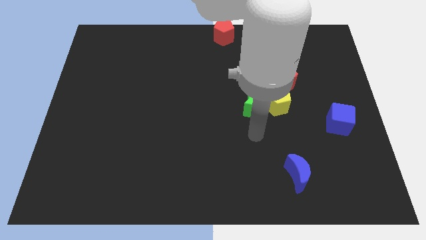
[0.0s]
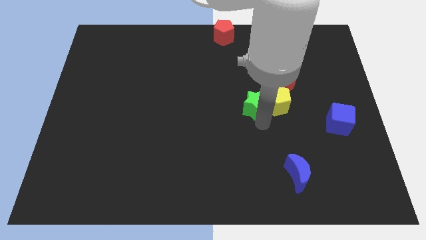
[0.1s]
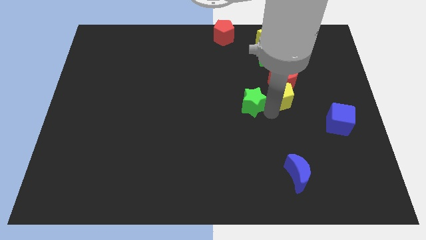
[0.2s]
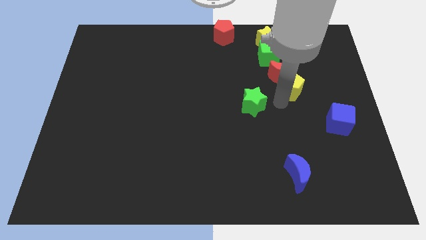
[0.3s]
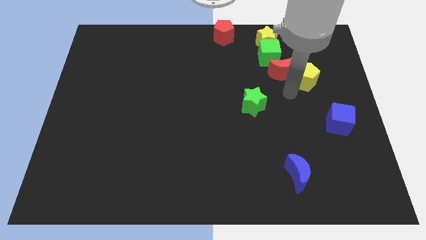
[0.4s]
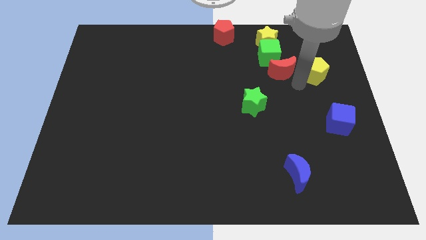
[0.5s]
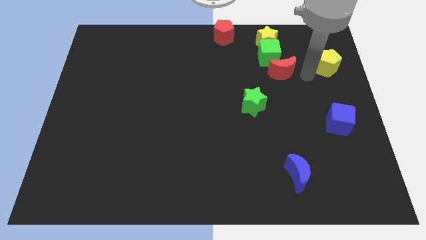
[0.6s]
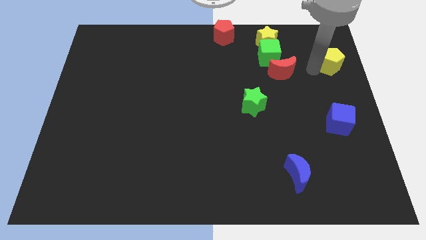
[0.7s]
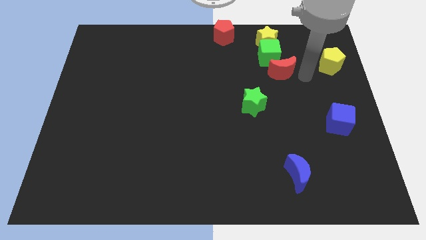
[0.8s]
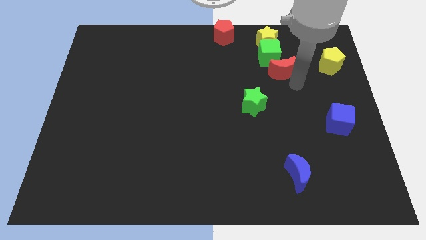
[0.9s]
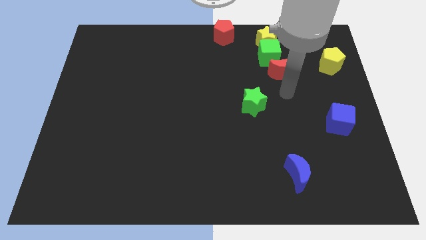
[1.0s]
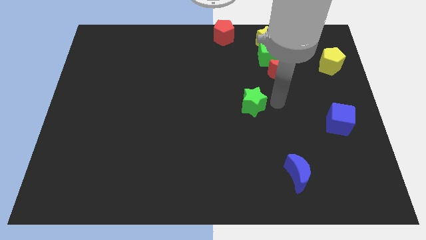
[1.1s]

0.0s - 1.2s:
push the yellow pentagon to the right of the red crescent

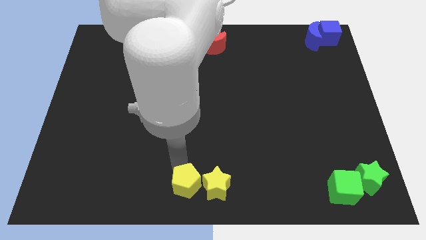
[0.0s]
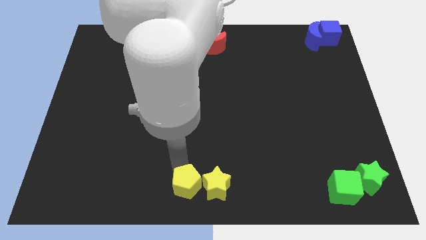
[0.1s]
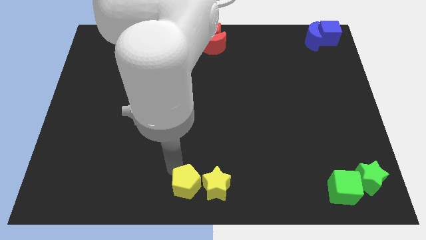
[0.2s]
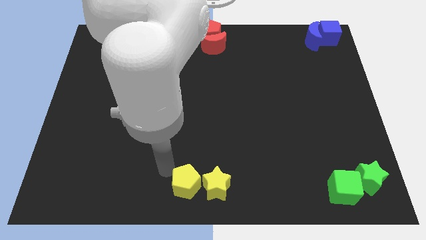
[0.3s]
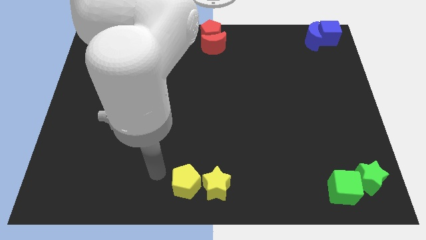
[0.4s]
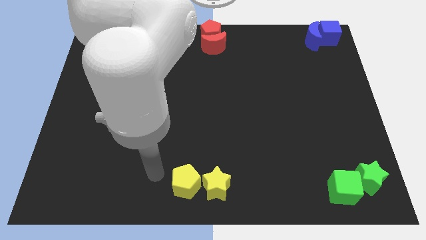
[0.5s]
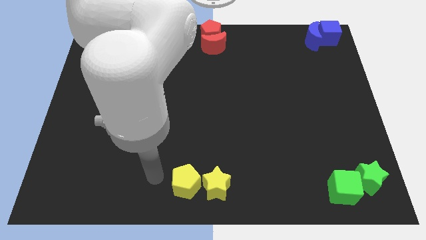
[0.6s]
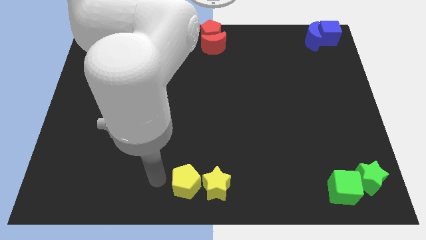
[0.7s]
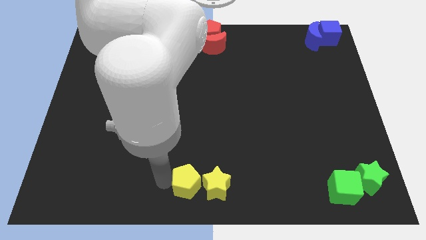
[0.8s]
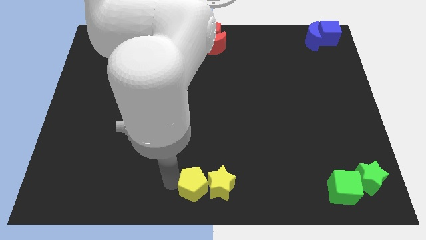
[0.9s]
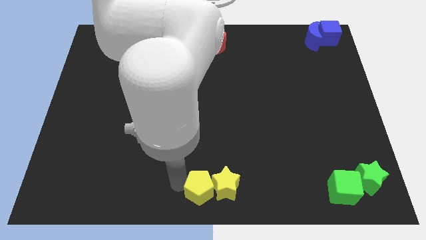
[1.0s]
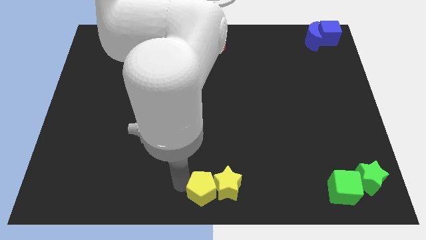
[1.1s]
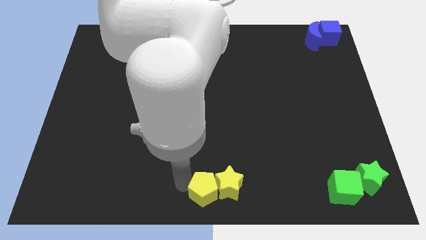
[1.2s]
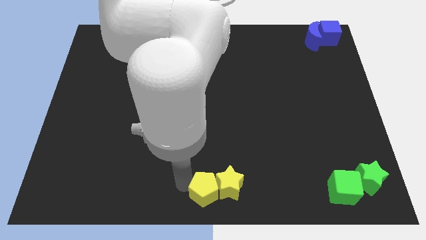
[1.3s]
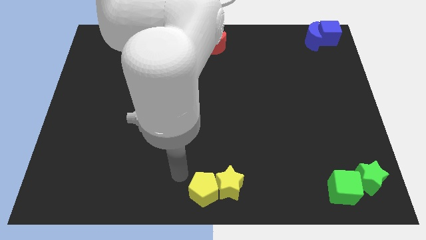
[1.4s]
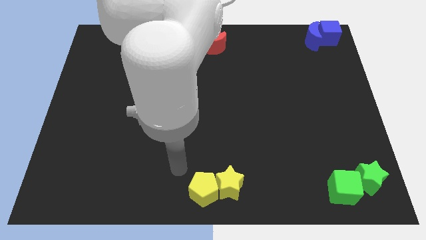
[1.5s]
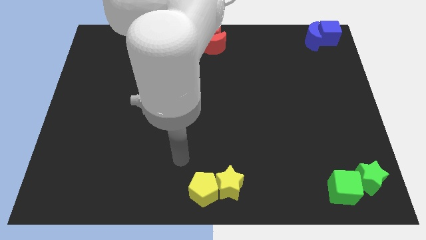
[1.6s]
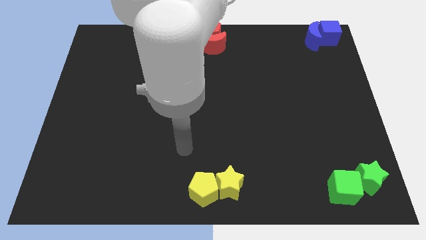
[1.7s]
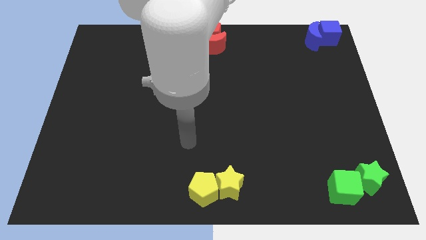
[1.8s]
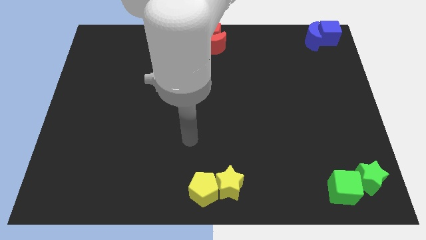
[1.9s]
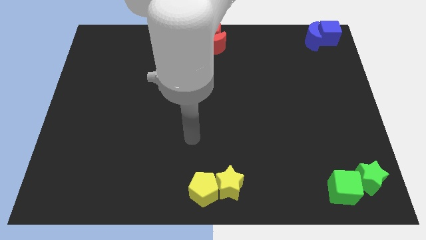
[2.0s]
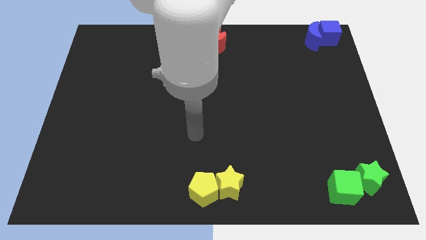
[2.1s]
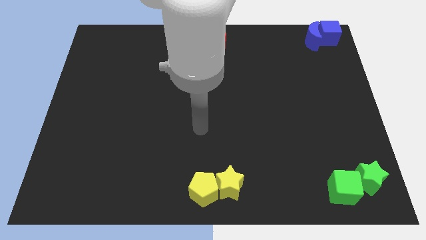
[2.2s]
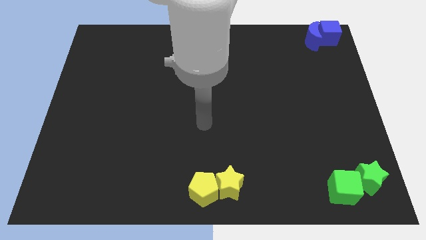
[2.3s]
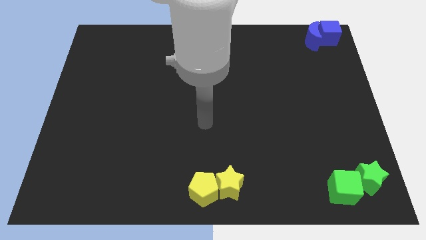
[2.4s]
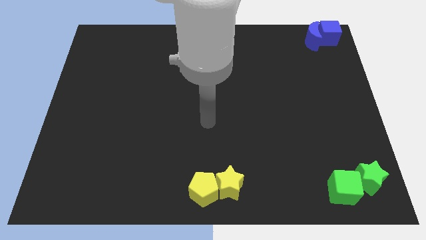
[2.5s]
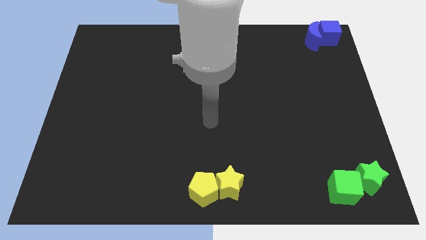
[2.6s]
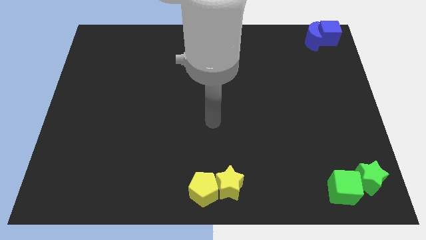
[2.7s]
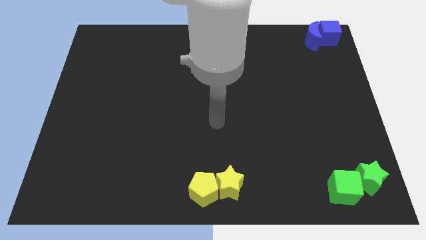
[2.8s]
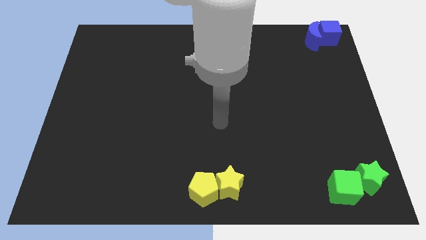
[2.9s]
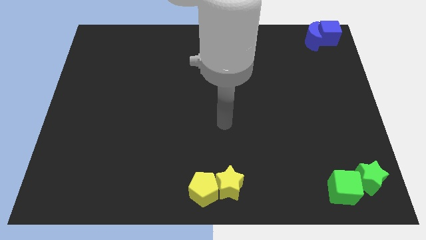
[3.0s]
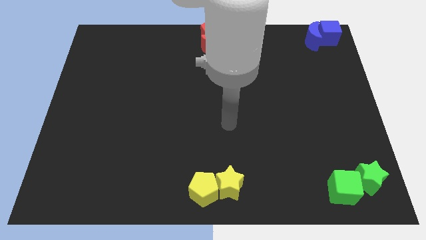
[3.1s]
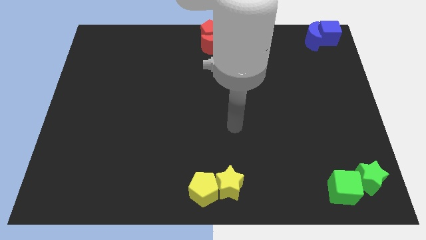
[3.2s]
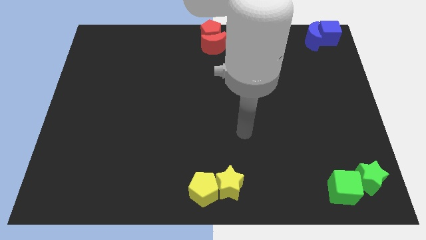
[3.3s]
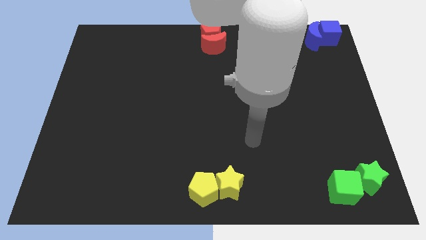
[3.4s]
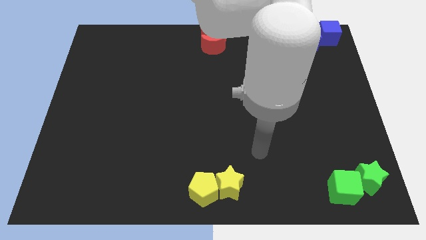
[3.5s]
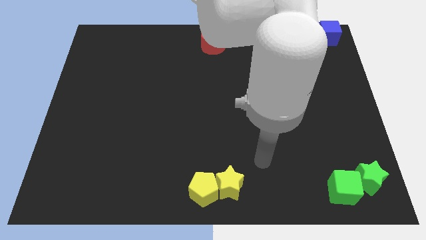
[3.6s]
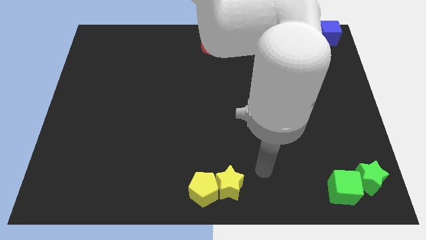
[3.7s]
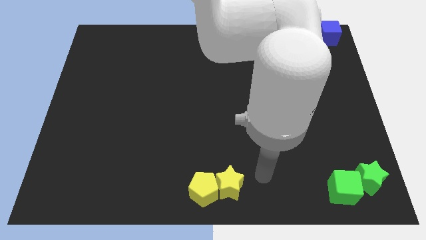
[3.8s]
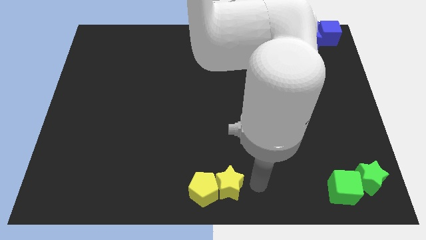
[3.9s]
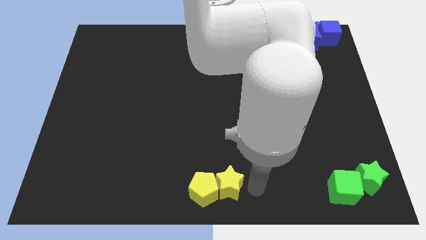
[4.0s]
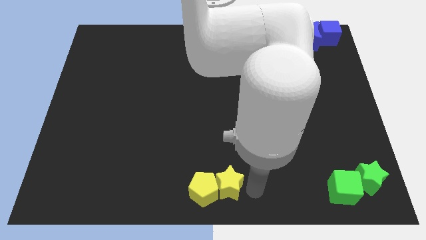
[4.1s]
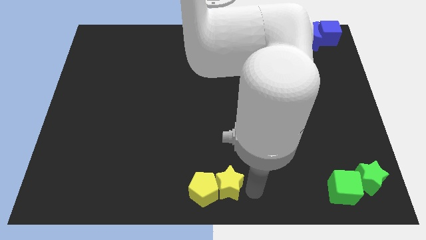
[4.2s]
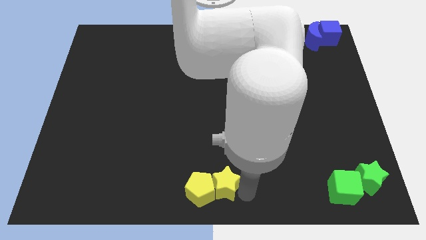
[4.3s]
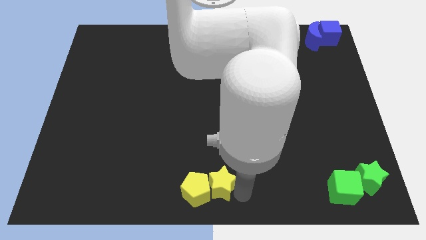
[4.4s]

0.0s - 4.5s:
place the arm right to the yellow star

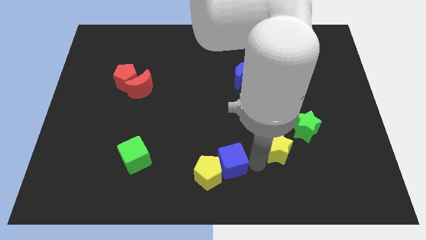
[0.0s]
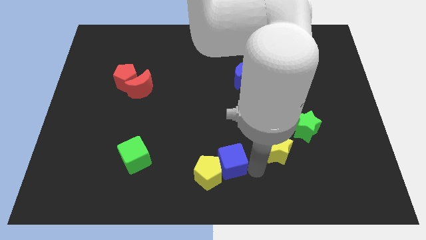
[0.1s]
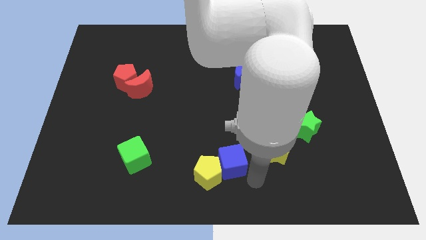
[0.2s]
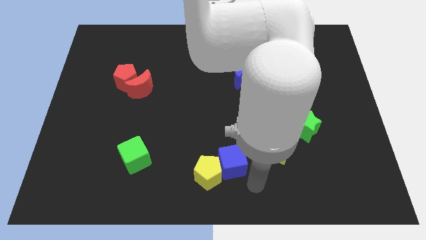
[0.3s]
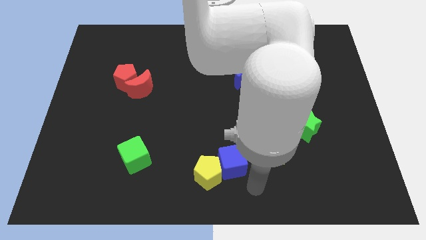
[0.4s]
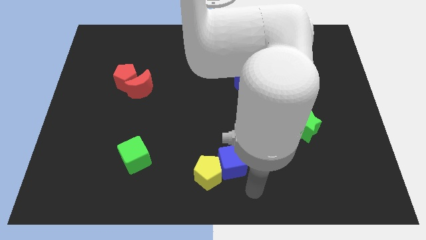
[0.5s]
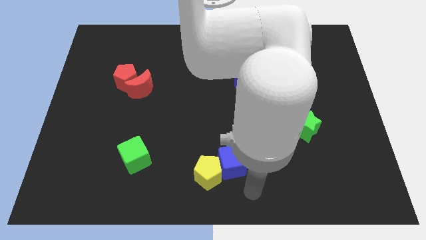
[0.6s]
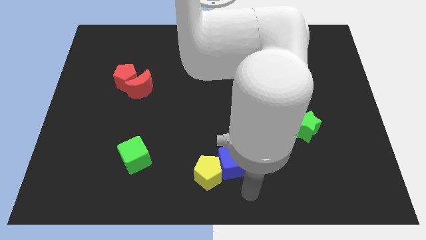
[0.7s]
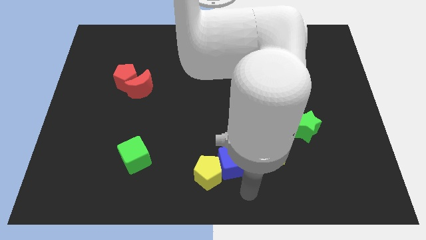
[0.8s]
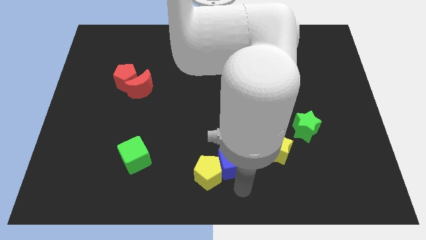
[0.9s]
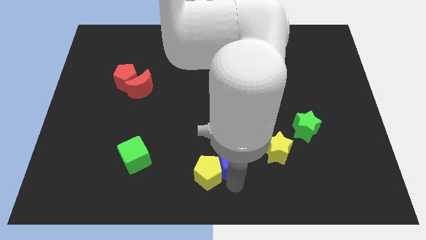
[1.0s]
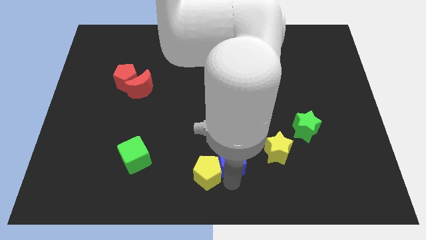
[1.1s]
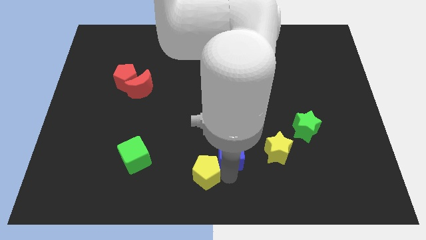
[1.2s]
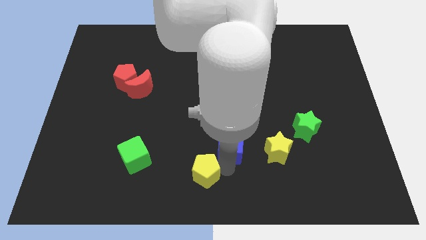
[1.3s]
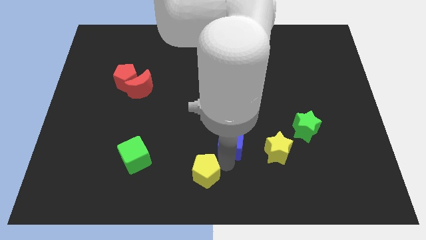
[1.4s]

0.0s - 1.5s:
push the blue cube slightly to the top

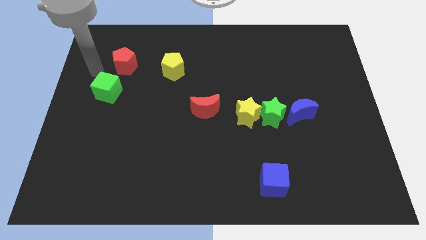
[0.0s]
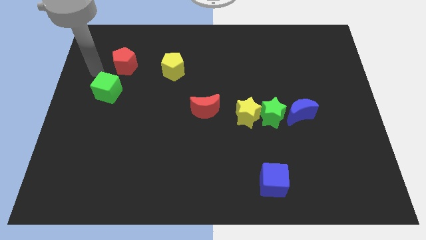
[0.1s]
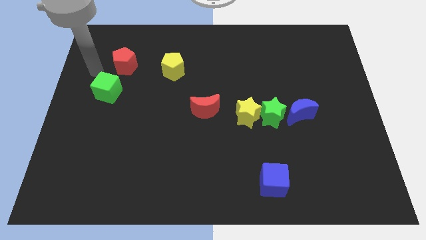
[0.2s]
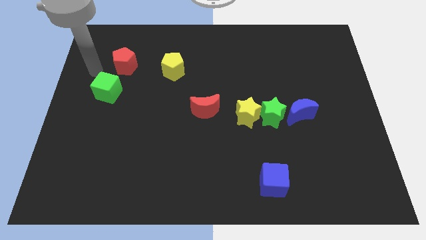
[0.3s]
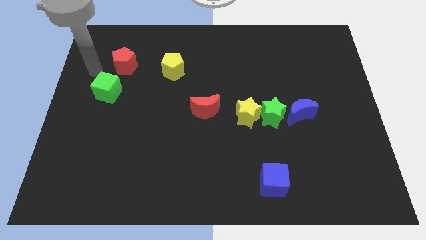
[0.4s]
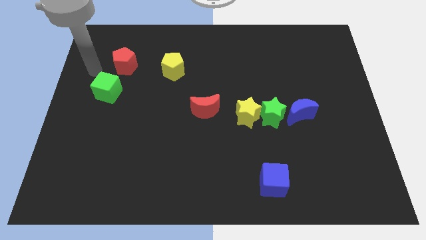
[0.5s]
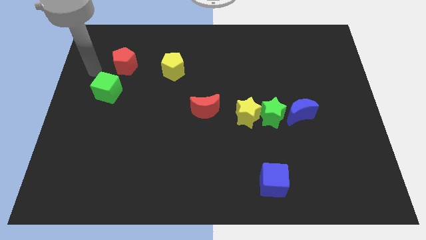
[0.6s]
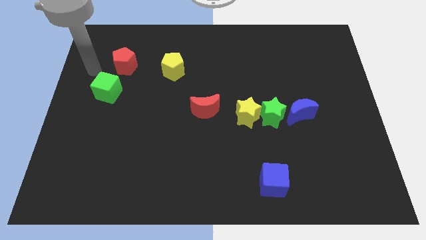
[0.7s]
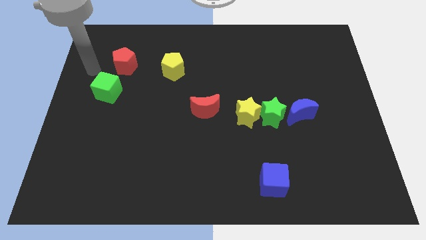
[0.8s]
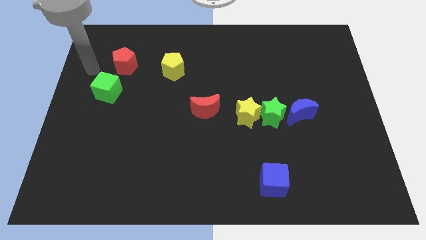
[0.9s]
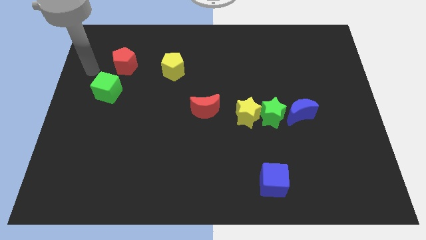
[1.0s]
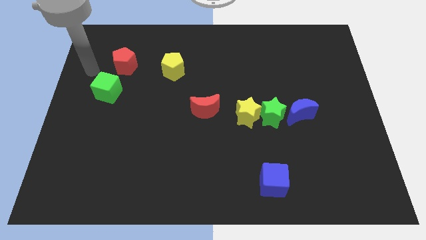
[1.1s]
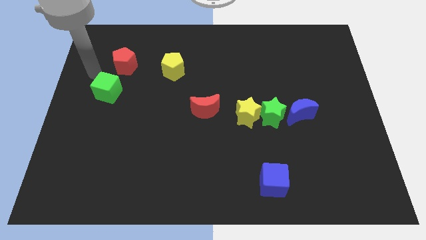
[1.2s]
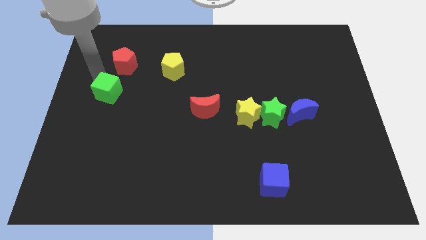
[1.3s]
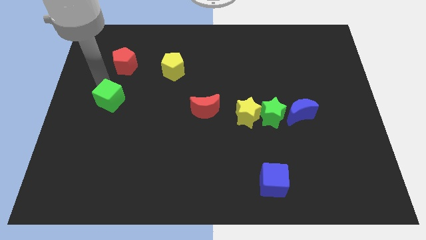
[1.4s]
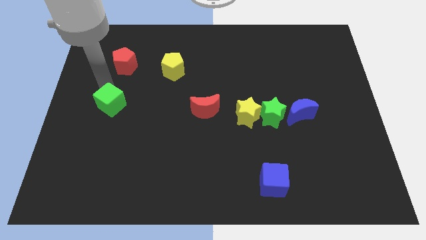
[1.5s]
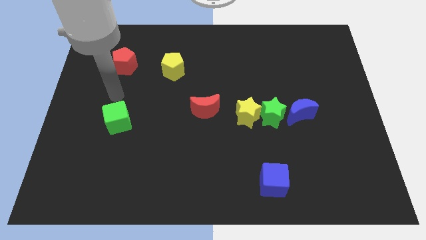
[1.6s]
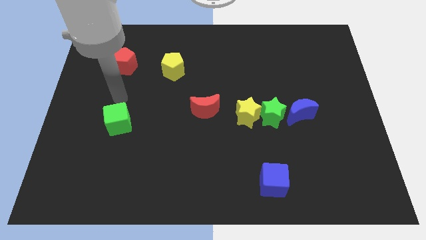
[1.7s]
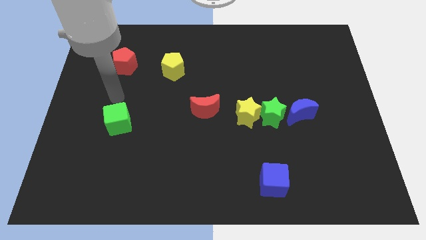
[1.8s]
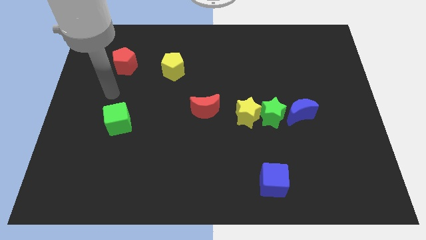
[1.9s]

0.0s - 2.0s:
push the green cube towards the bottom of the board
